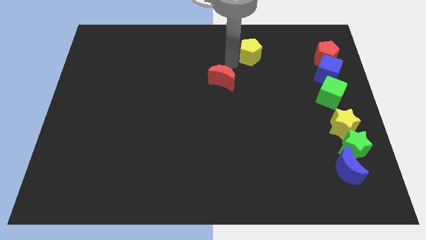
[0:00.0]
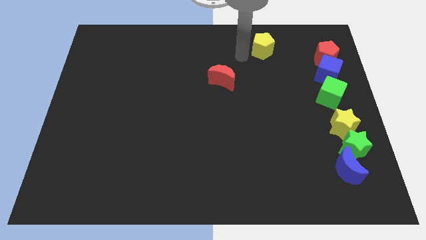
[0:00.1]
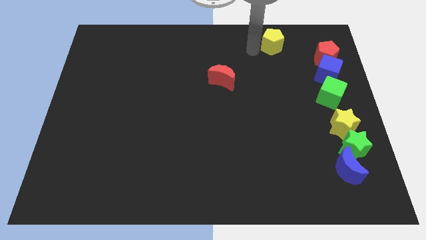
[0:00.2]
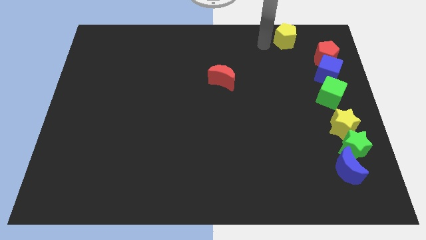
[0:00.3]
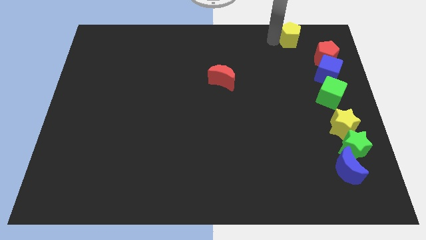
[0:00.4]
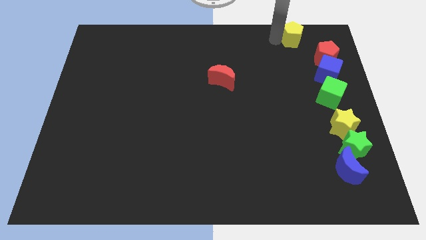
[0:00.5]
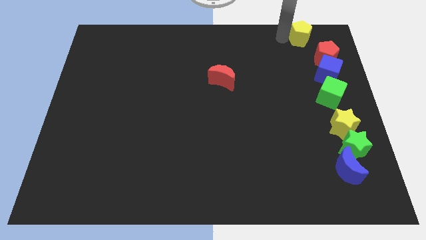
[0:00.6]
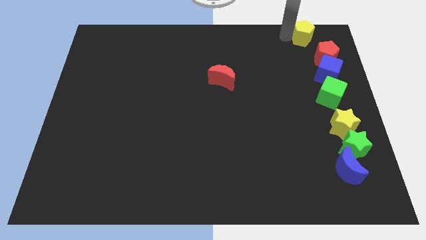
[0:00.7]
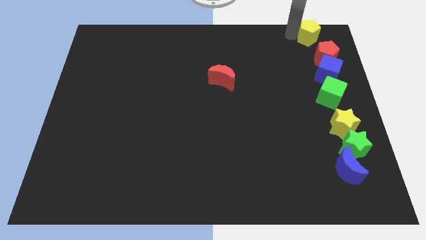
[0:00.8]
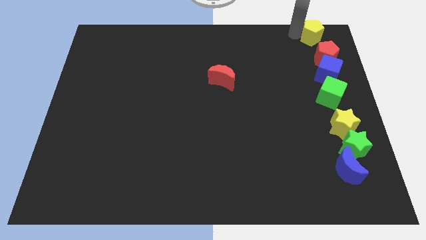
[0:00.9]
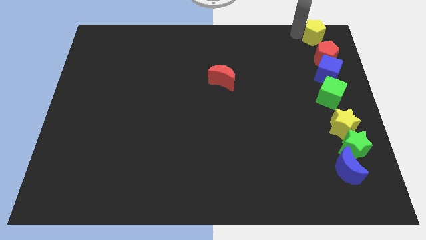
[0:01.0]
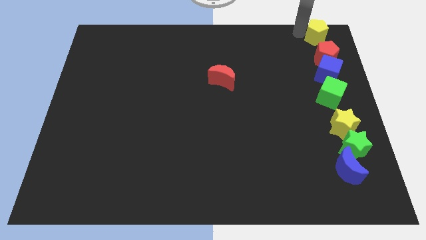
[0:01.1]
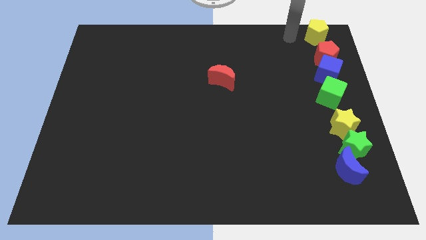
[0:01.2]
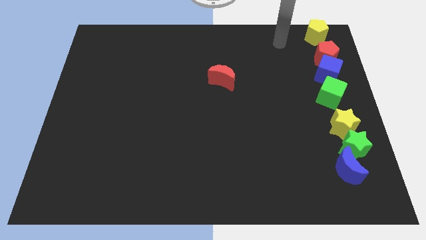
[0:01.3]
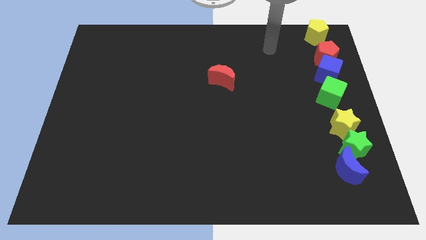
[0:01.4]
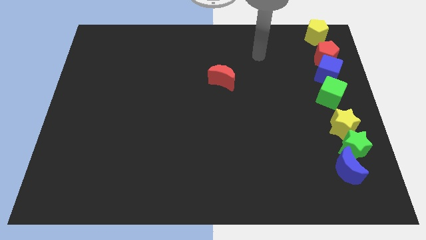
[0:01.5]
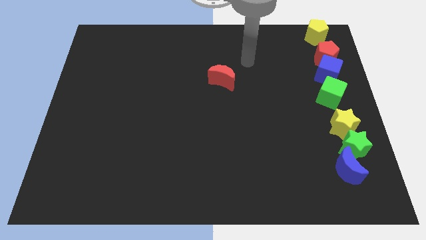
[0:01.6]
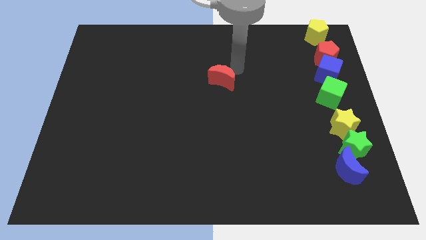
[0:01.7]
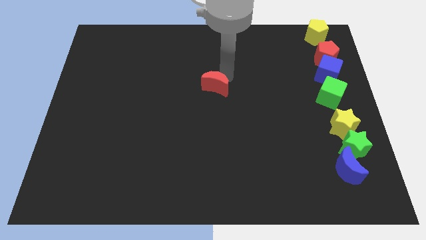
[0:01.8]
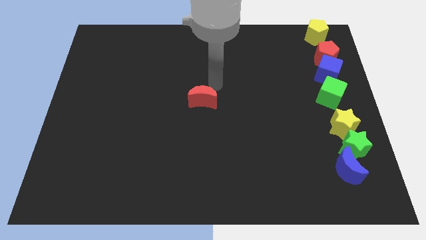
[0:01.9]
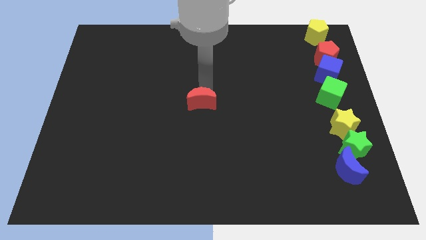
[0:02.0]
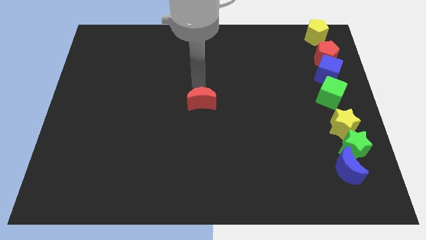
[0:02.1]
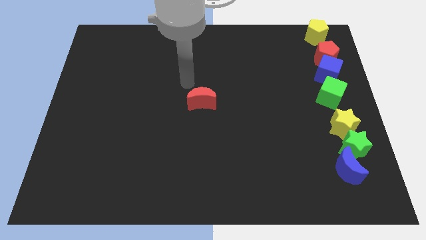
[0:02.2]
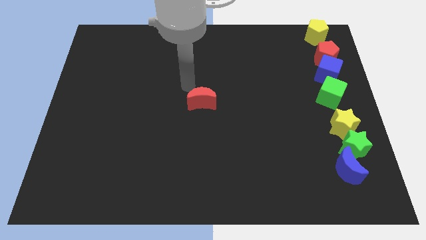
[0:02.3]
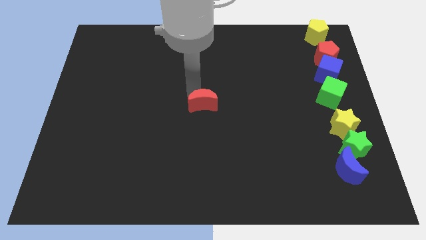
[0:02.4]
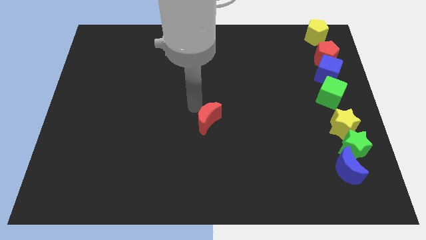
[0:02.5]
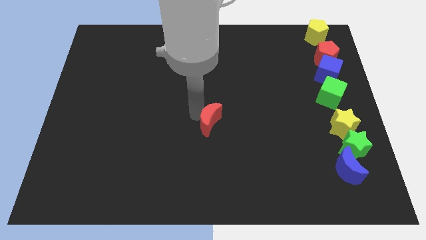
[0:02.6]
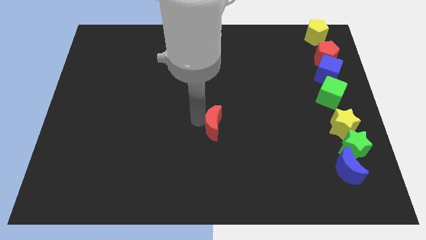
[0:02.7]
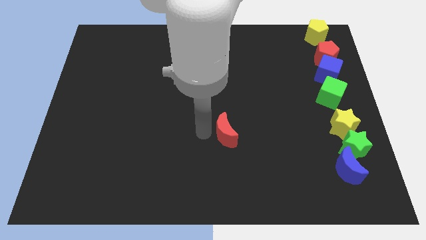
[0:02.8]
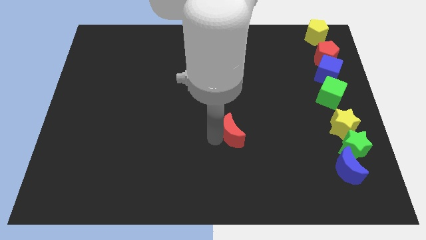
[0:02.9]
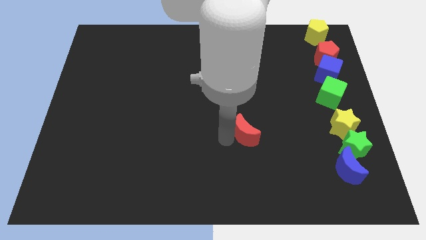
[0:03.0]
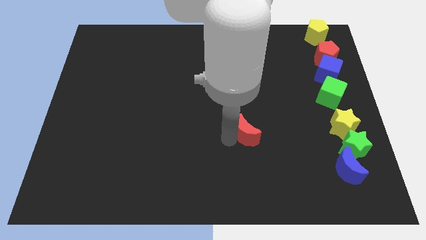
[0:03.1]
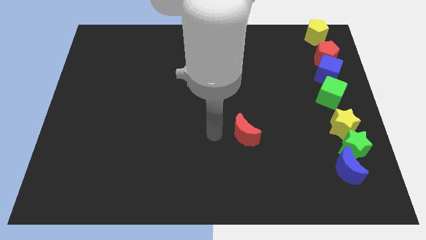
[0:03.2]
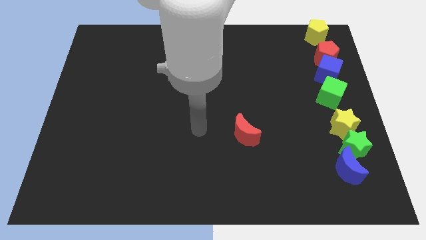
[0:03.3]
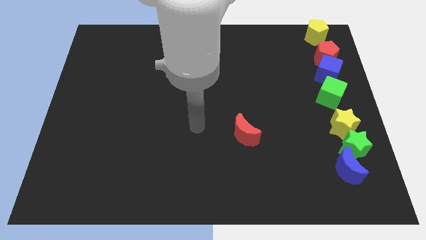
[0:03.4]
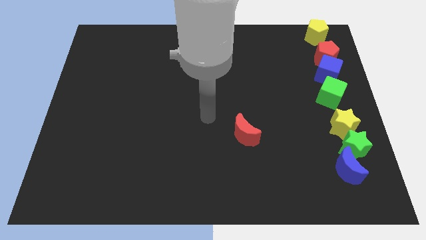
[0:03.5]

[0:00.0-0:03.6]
place the yellow pentagon on top of the red pentagon to form a vertical line

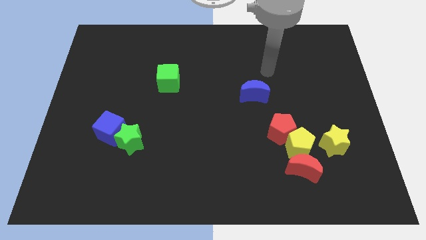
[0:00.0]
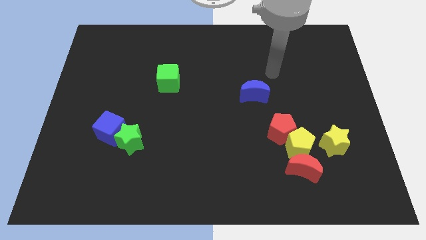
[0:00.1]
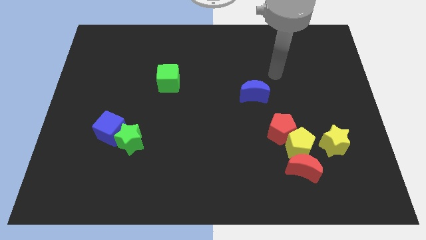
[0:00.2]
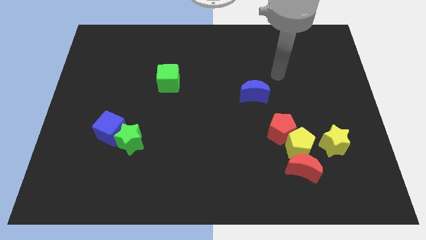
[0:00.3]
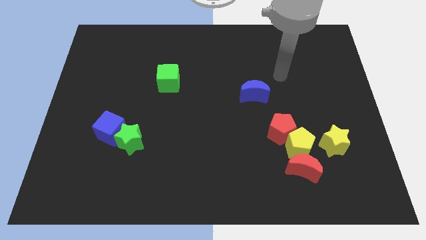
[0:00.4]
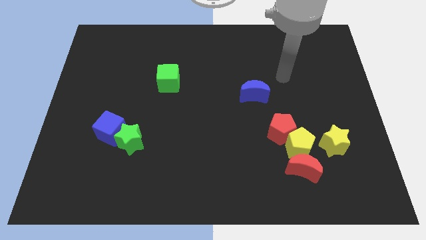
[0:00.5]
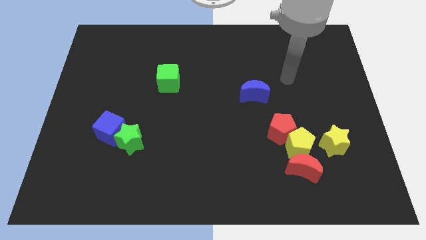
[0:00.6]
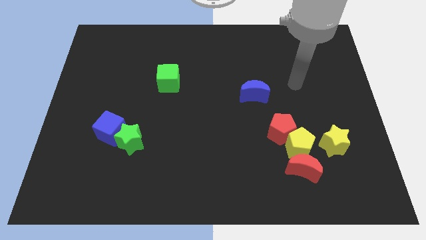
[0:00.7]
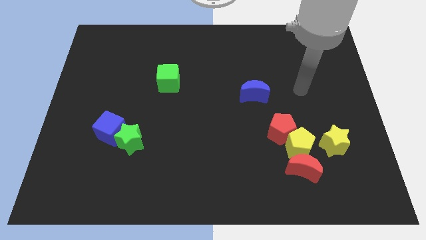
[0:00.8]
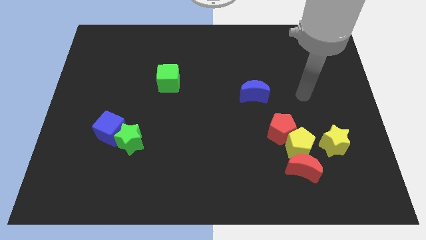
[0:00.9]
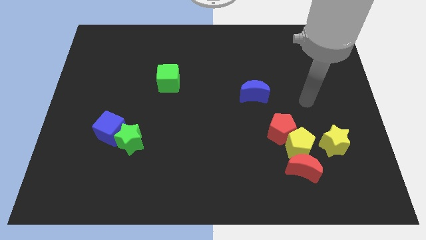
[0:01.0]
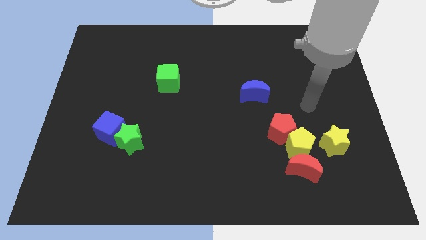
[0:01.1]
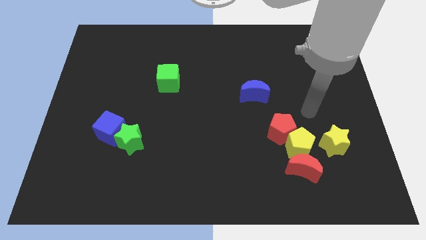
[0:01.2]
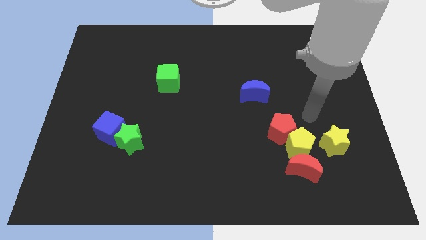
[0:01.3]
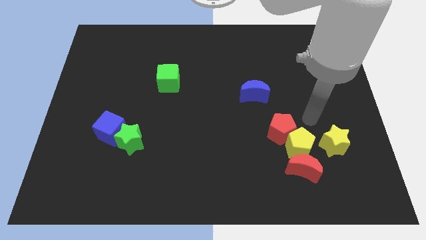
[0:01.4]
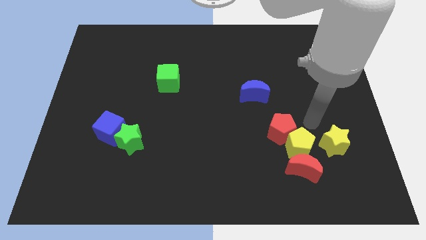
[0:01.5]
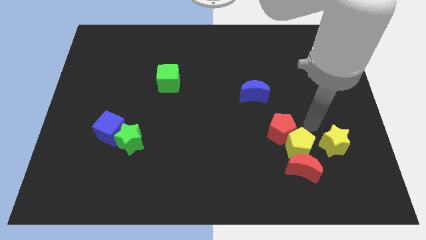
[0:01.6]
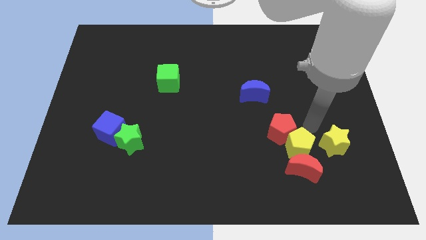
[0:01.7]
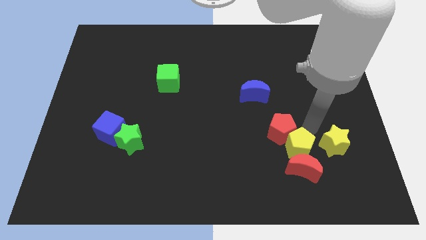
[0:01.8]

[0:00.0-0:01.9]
place your arm above yellow pentagon

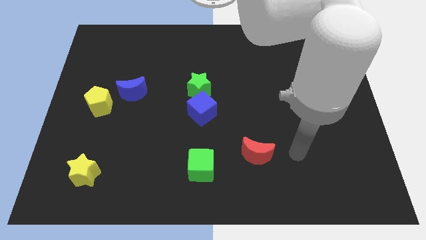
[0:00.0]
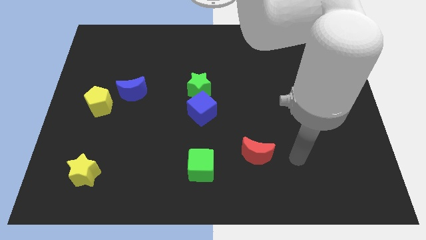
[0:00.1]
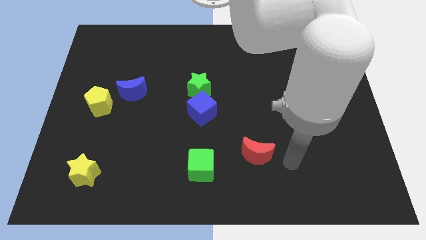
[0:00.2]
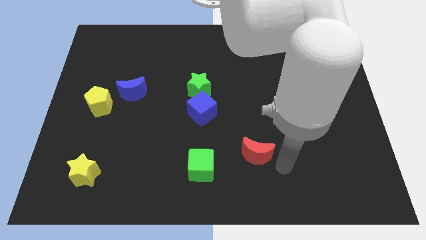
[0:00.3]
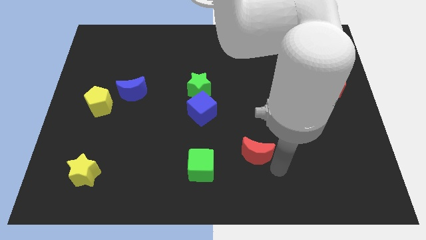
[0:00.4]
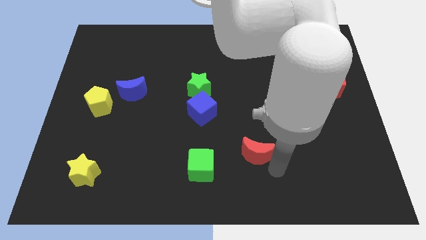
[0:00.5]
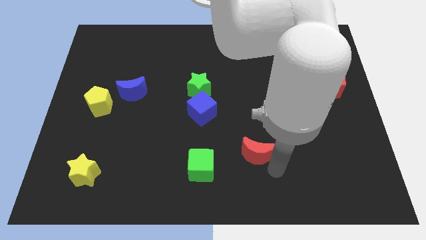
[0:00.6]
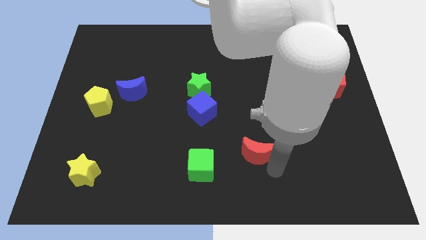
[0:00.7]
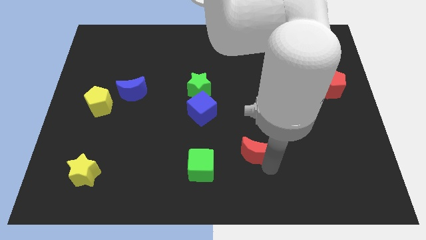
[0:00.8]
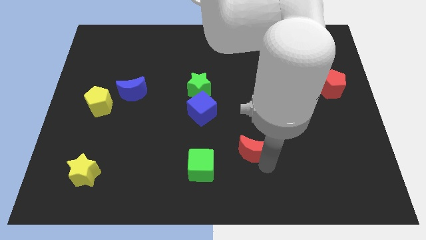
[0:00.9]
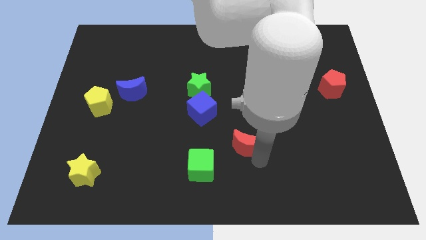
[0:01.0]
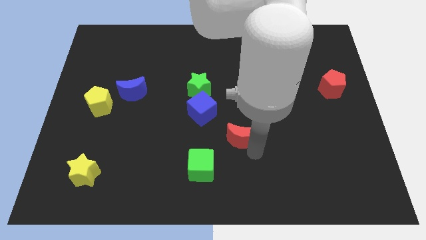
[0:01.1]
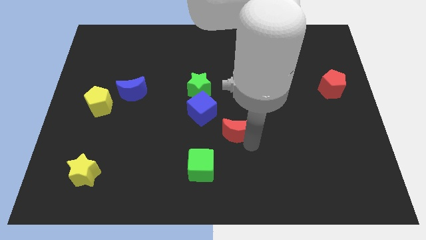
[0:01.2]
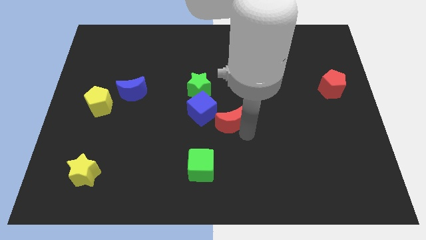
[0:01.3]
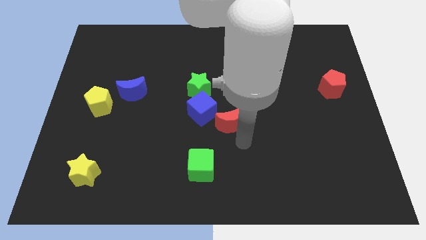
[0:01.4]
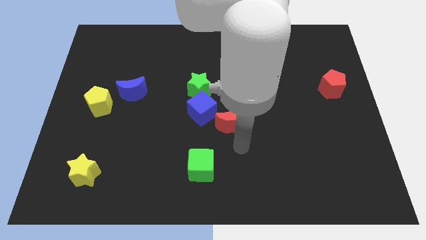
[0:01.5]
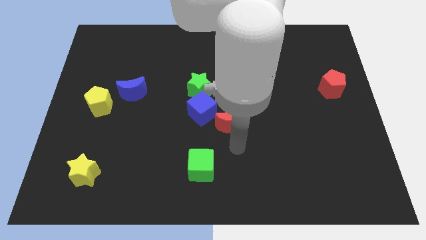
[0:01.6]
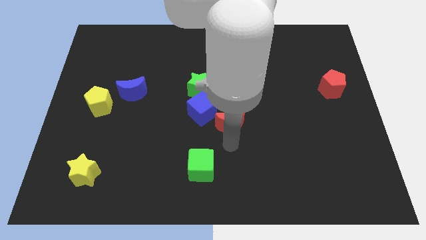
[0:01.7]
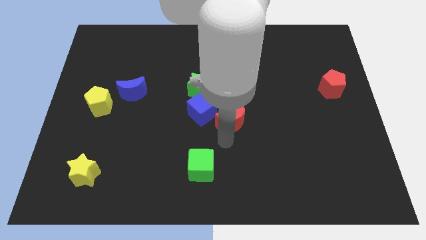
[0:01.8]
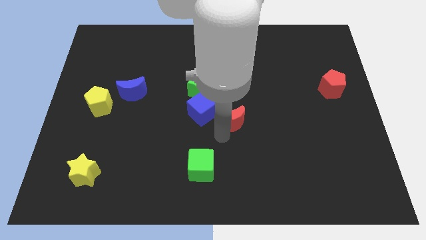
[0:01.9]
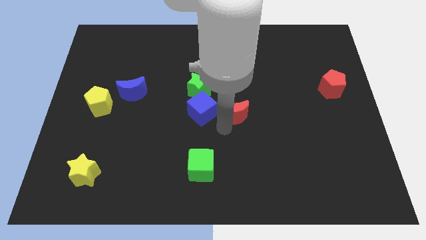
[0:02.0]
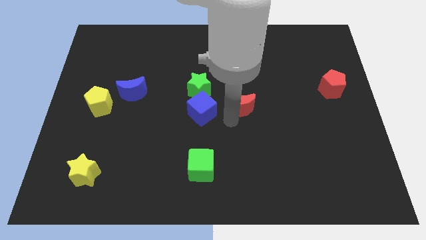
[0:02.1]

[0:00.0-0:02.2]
put red crescent to the right of the blue cube

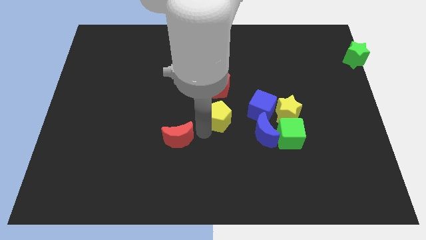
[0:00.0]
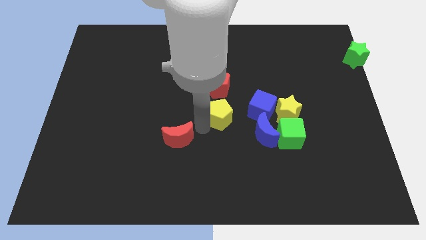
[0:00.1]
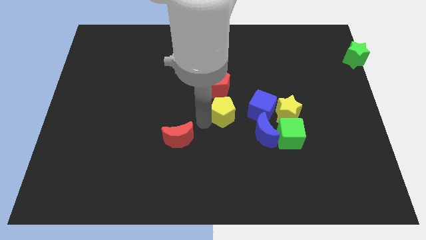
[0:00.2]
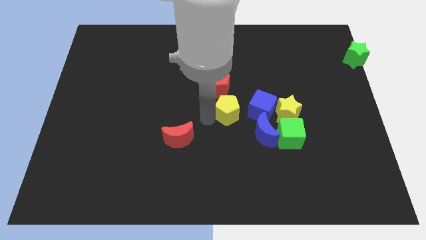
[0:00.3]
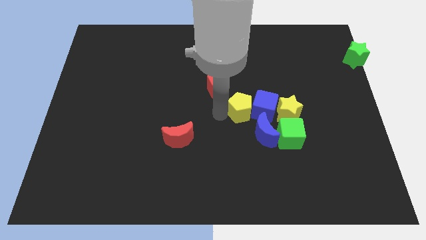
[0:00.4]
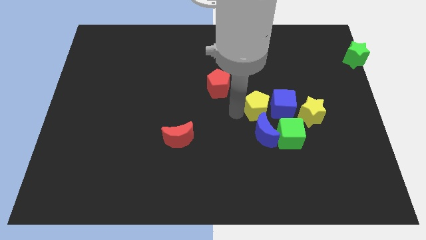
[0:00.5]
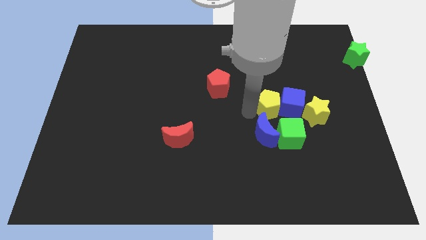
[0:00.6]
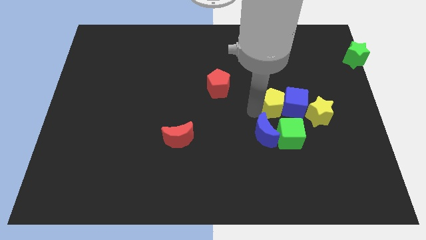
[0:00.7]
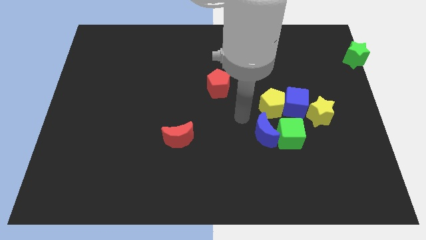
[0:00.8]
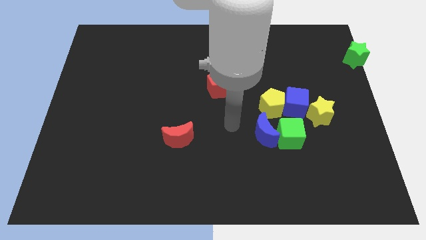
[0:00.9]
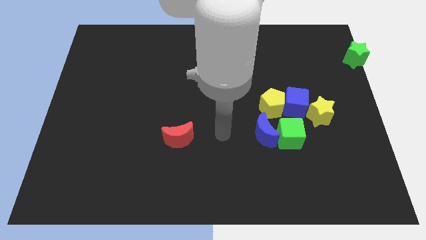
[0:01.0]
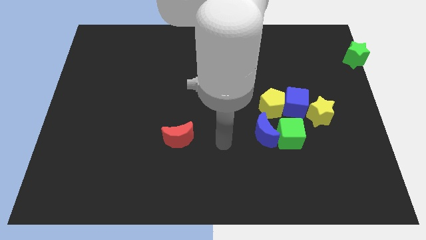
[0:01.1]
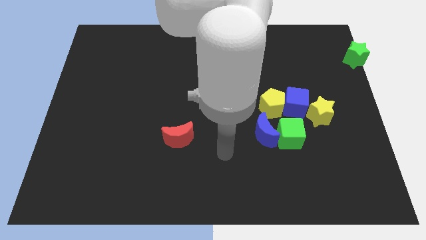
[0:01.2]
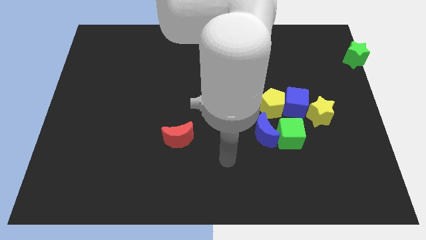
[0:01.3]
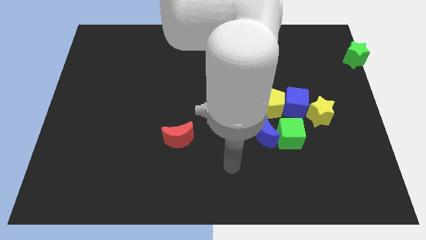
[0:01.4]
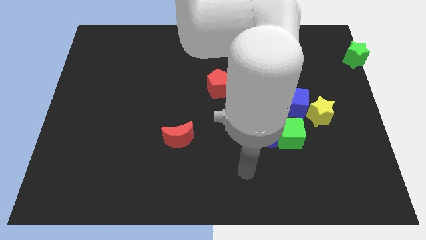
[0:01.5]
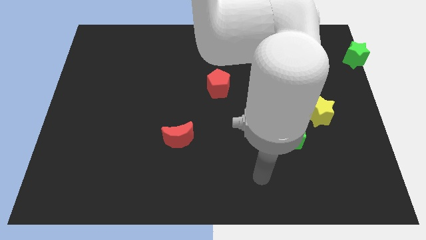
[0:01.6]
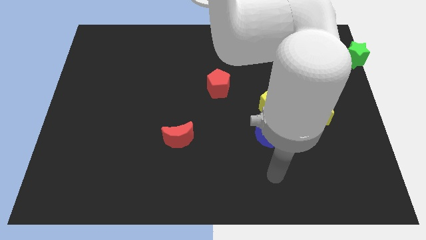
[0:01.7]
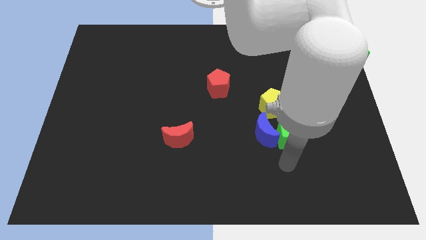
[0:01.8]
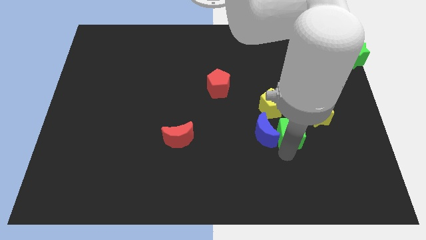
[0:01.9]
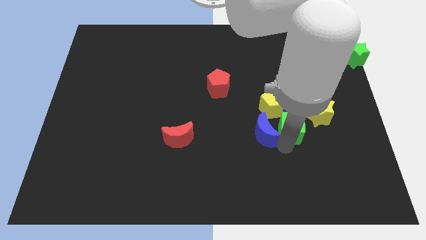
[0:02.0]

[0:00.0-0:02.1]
push the yellow pentagon into the blue cube
